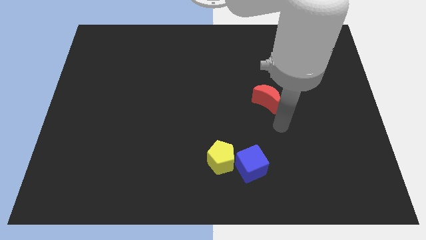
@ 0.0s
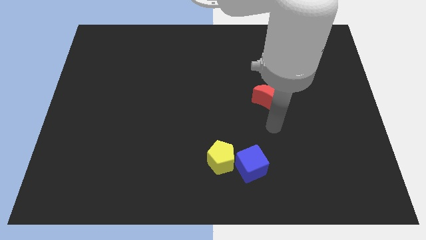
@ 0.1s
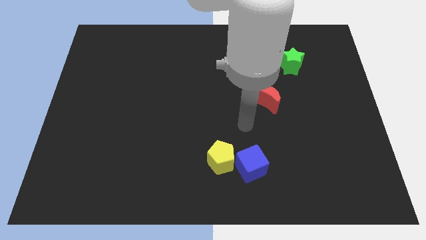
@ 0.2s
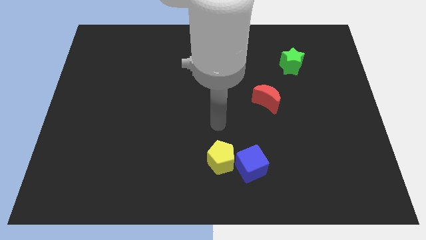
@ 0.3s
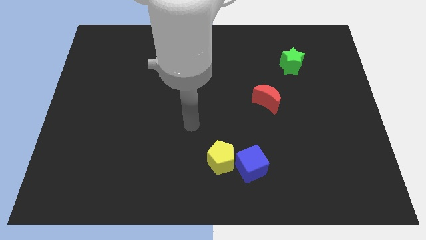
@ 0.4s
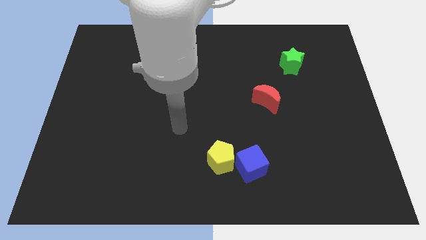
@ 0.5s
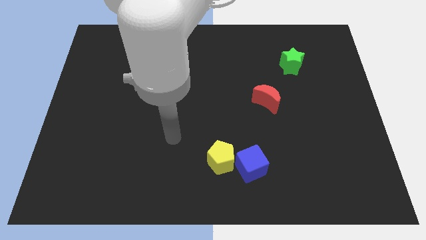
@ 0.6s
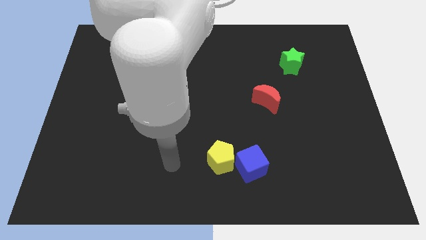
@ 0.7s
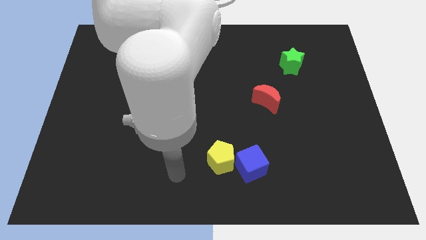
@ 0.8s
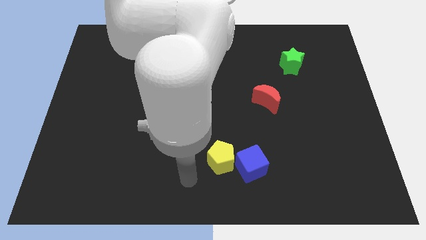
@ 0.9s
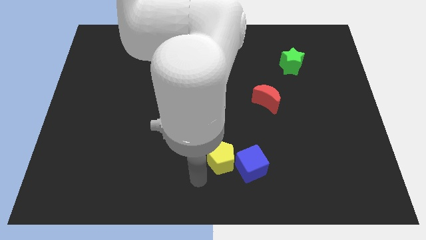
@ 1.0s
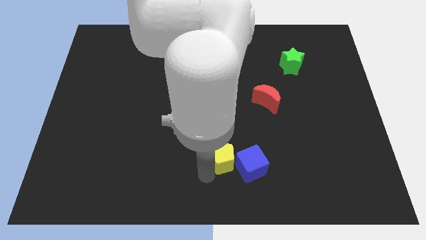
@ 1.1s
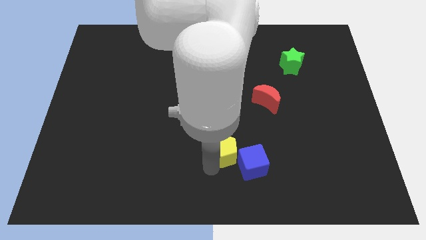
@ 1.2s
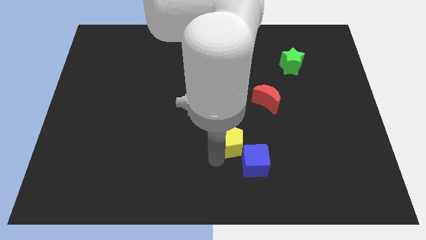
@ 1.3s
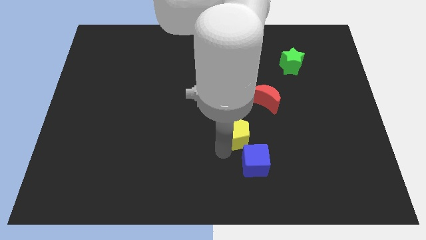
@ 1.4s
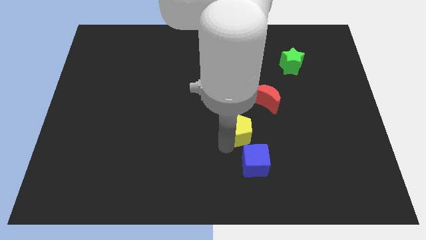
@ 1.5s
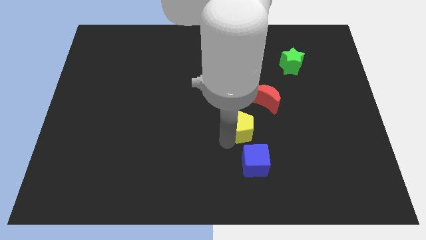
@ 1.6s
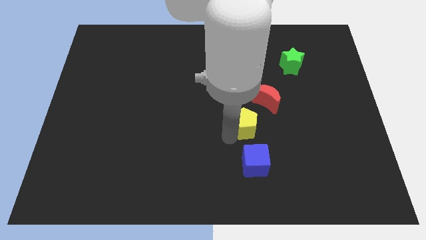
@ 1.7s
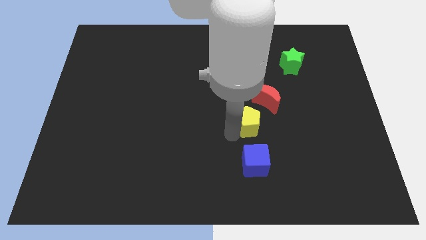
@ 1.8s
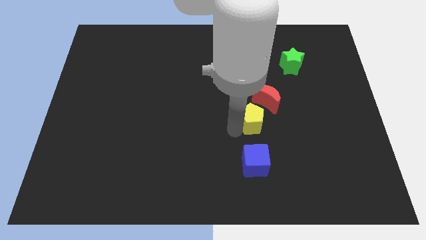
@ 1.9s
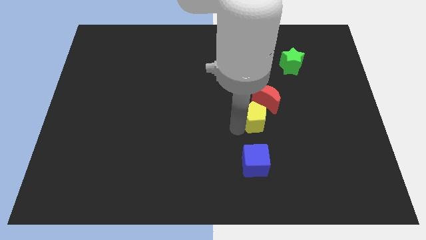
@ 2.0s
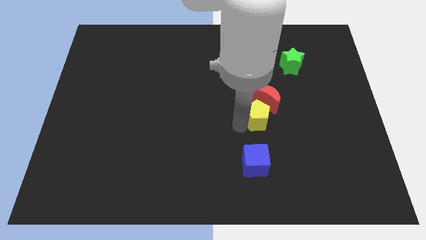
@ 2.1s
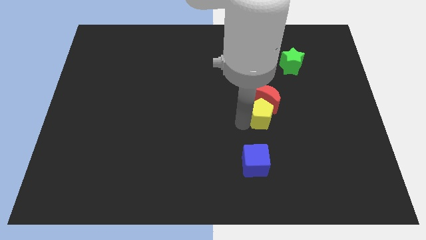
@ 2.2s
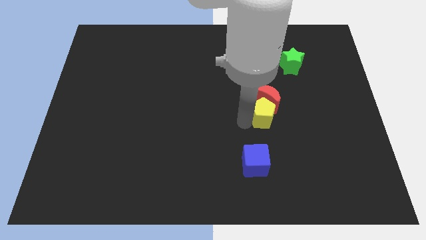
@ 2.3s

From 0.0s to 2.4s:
slide the yellow pentagon towards the moon

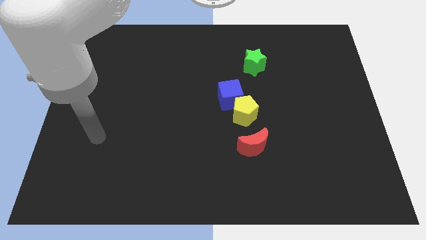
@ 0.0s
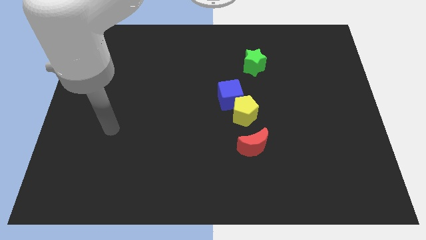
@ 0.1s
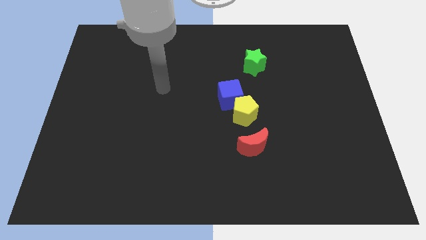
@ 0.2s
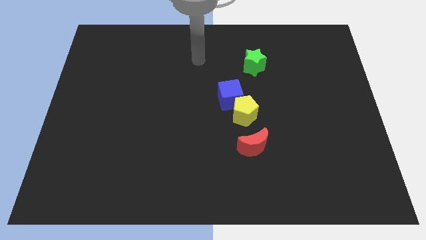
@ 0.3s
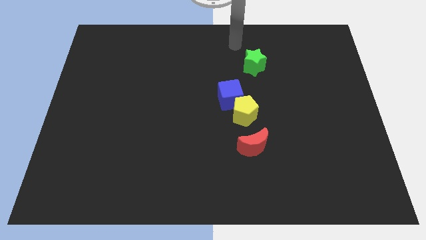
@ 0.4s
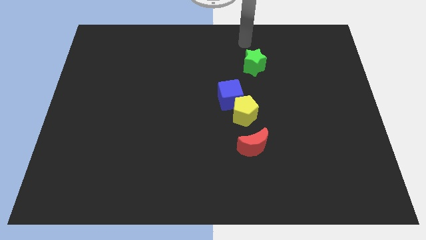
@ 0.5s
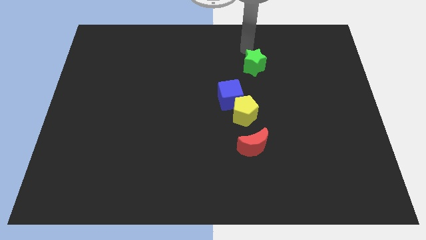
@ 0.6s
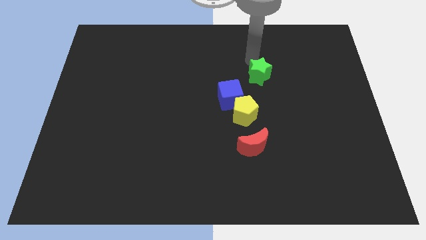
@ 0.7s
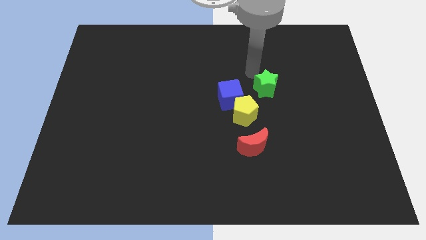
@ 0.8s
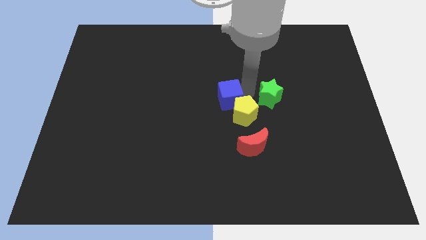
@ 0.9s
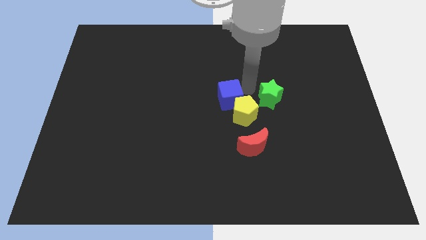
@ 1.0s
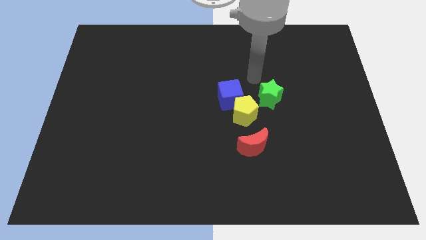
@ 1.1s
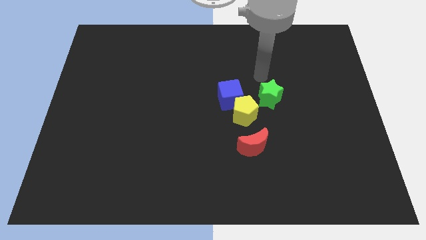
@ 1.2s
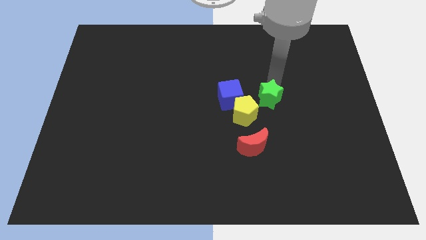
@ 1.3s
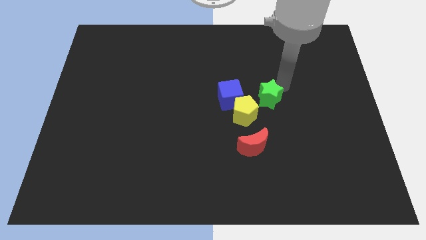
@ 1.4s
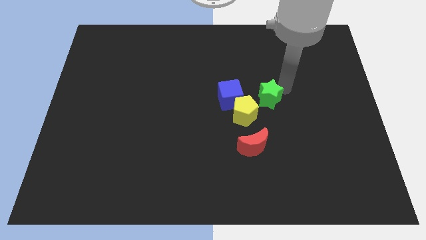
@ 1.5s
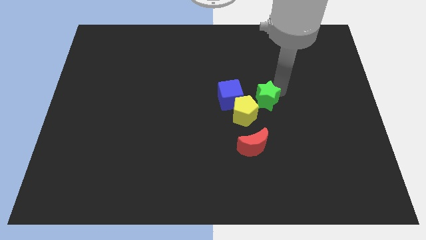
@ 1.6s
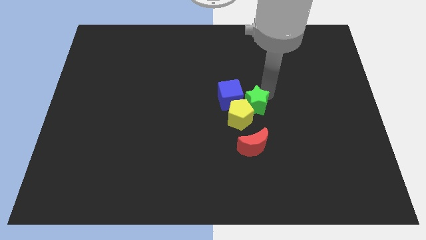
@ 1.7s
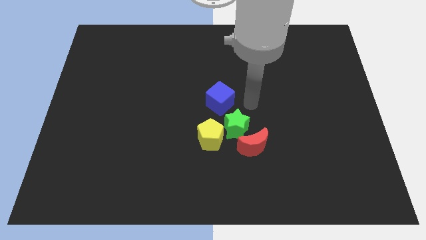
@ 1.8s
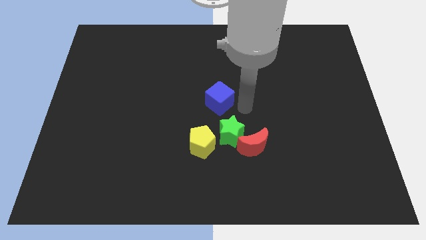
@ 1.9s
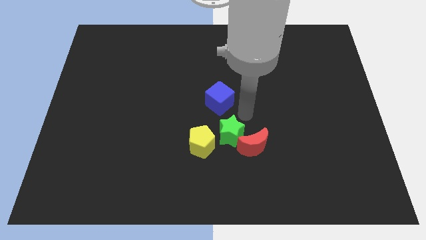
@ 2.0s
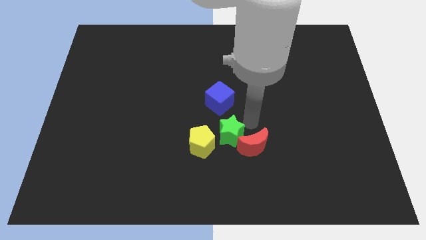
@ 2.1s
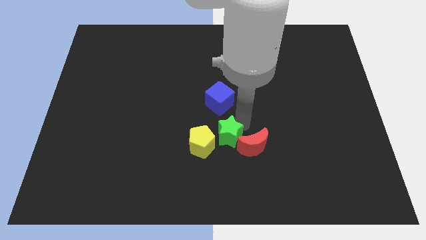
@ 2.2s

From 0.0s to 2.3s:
slide the green star to the yellow block

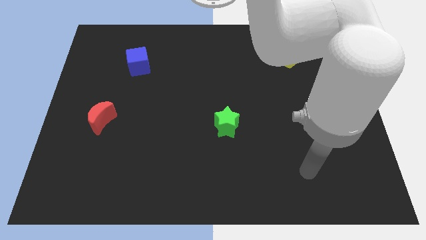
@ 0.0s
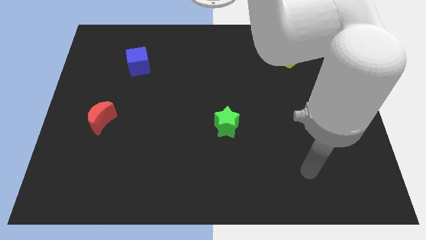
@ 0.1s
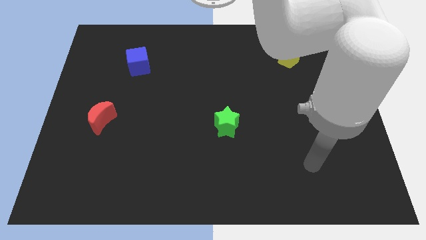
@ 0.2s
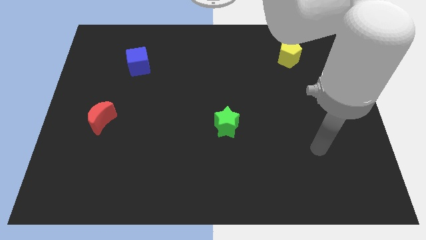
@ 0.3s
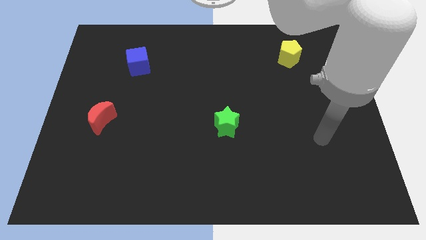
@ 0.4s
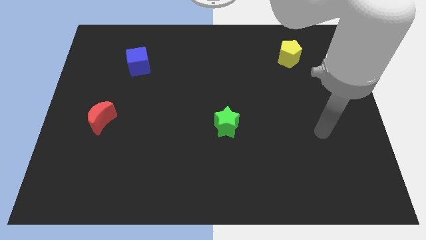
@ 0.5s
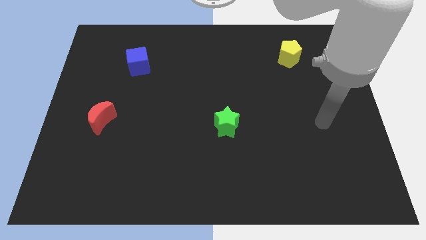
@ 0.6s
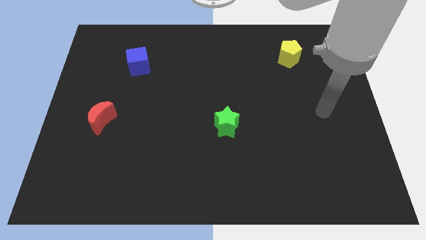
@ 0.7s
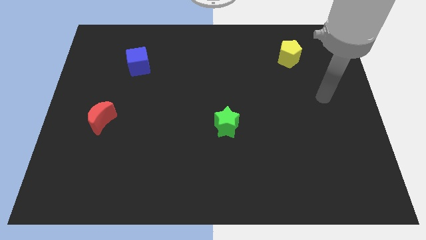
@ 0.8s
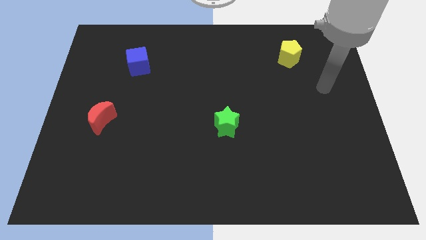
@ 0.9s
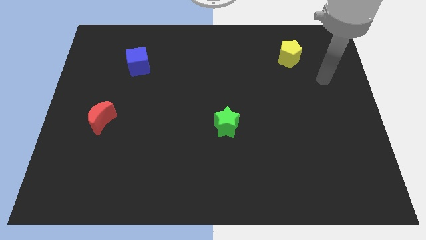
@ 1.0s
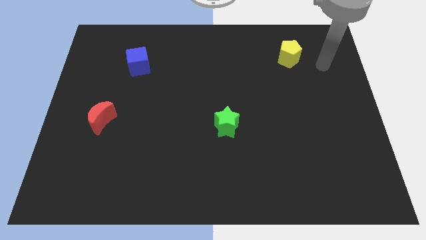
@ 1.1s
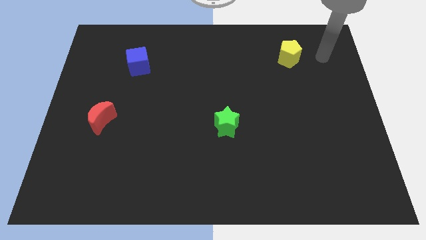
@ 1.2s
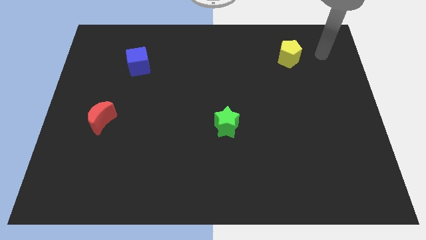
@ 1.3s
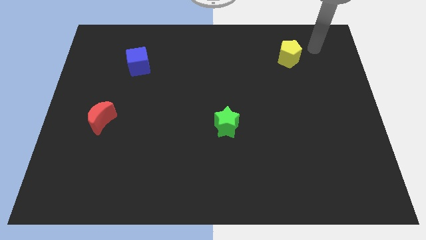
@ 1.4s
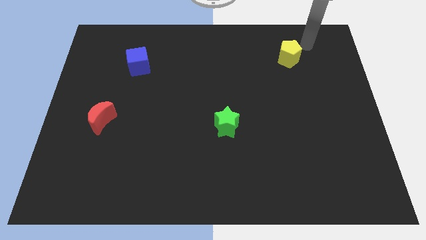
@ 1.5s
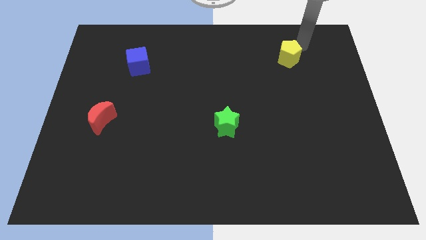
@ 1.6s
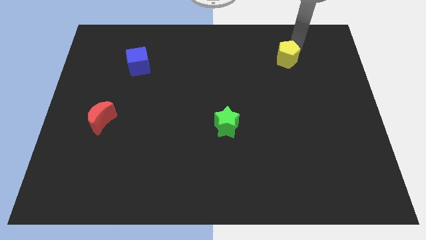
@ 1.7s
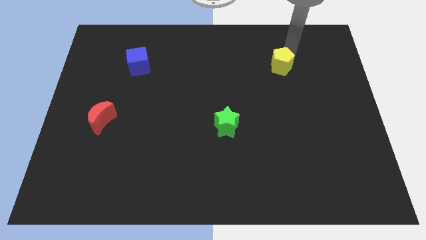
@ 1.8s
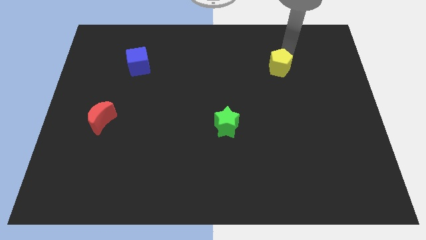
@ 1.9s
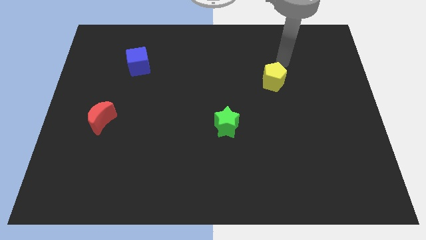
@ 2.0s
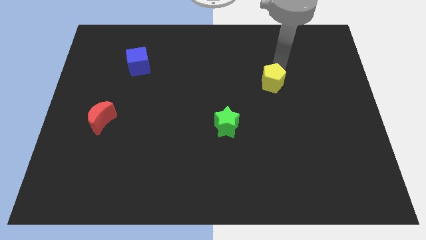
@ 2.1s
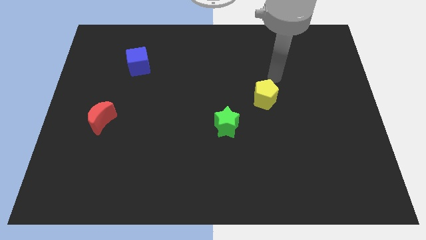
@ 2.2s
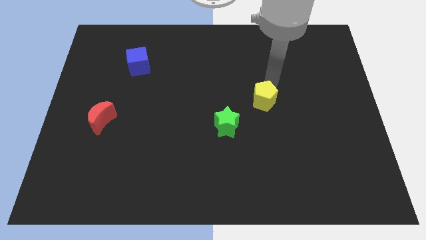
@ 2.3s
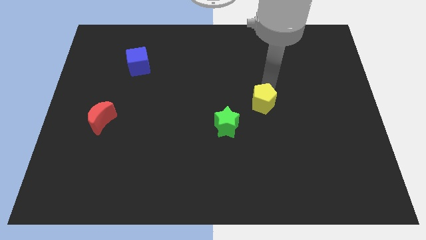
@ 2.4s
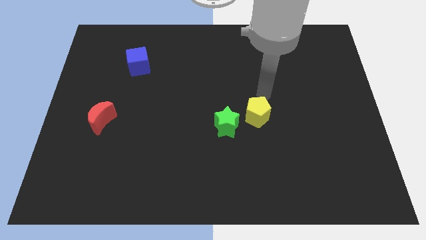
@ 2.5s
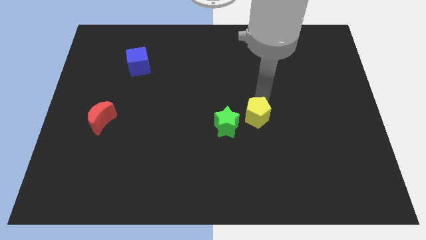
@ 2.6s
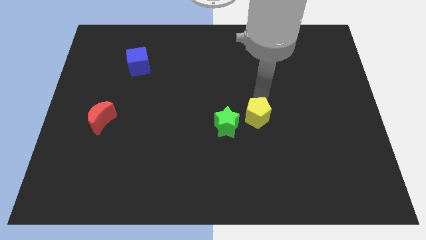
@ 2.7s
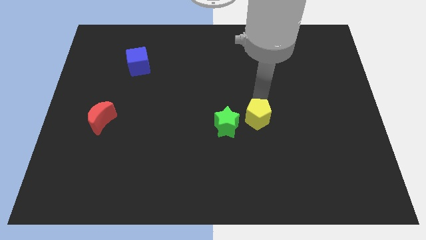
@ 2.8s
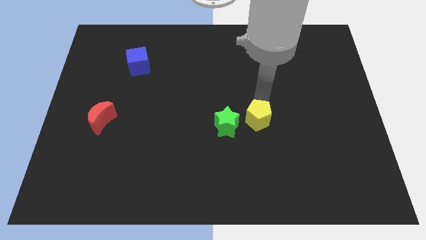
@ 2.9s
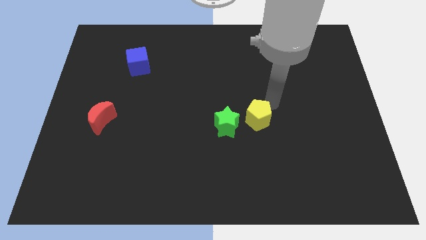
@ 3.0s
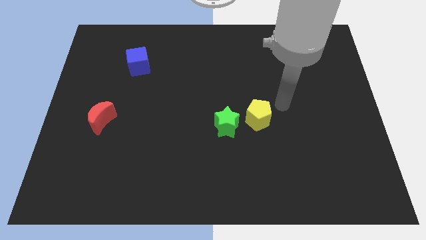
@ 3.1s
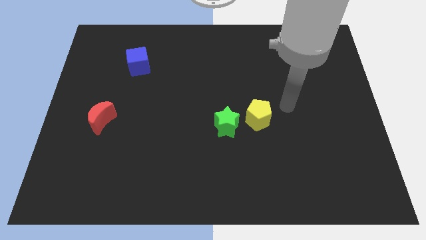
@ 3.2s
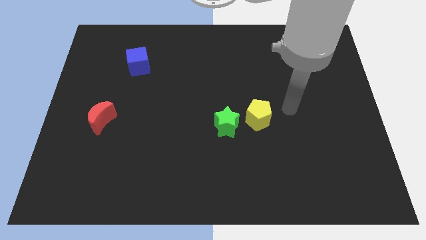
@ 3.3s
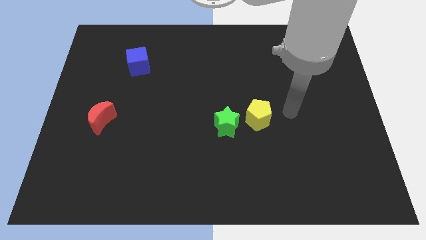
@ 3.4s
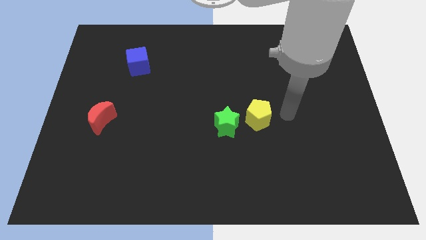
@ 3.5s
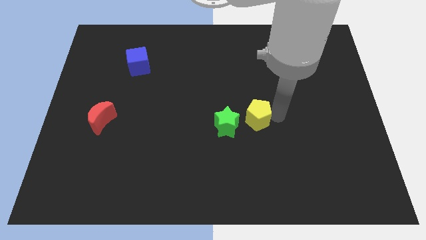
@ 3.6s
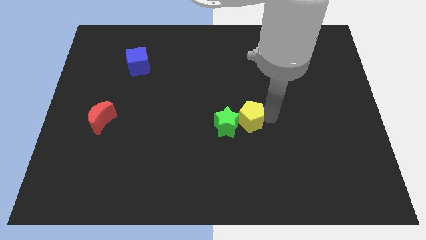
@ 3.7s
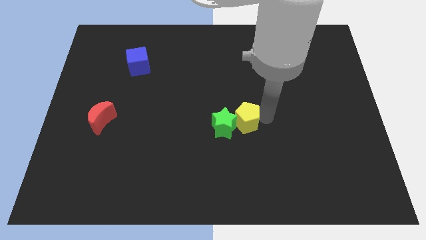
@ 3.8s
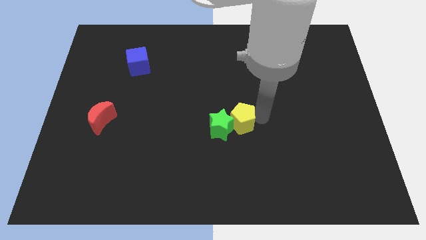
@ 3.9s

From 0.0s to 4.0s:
put the yellow pentagon next to the green star
